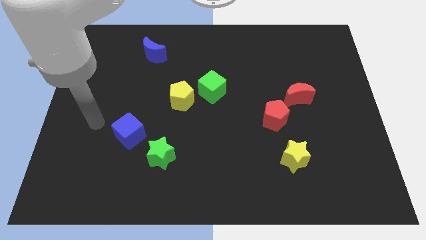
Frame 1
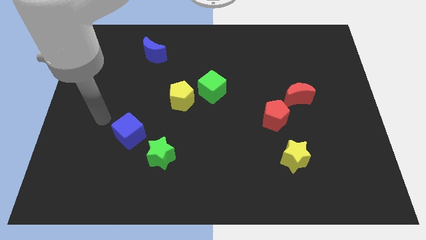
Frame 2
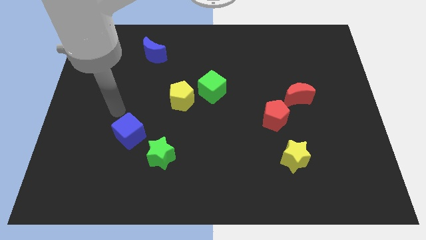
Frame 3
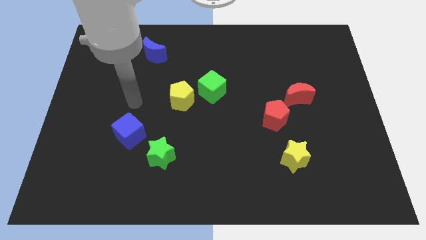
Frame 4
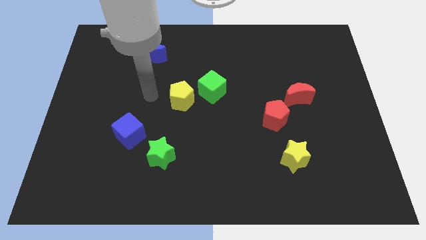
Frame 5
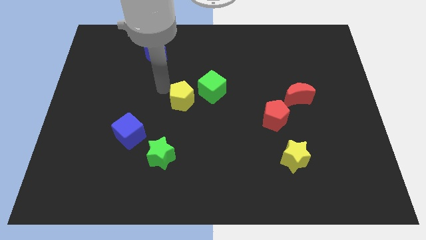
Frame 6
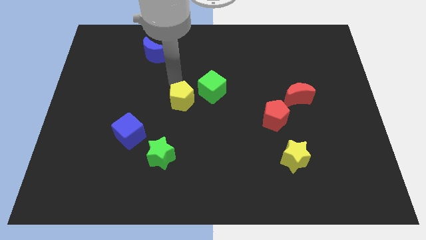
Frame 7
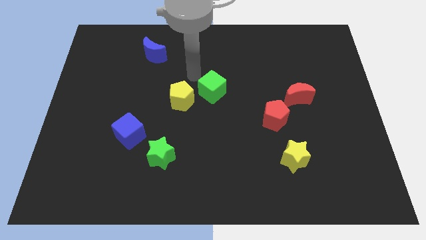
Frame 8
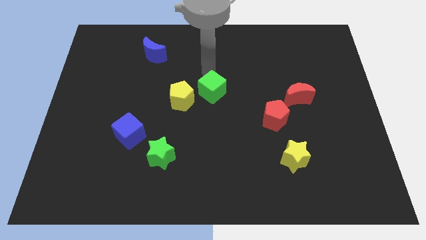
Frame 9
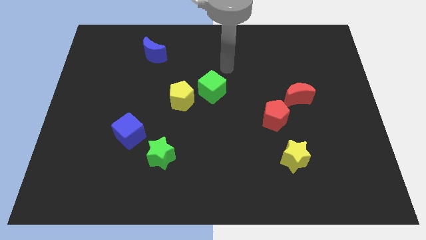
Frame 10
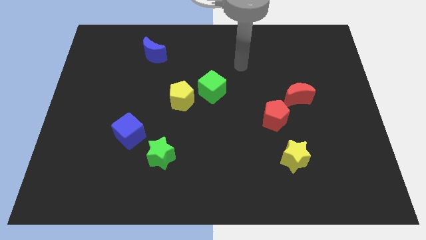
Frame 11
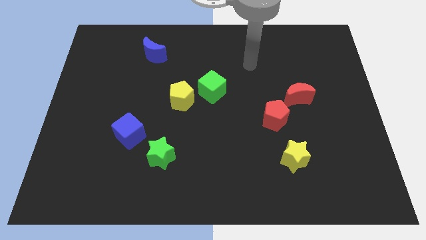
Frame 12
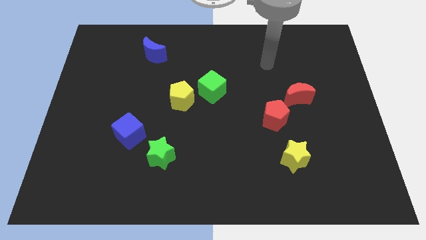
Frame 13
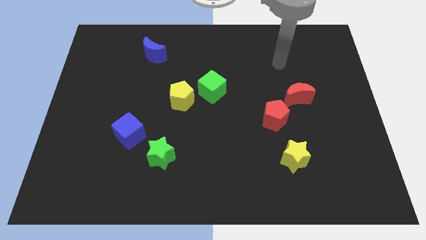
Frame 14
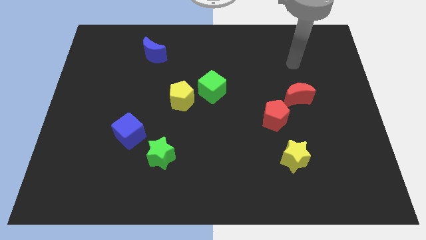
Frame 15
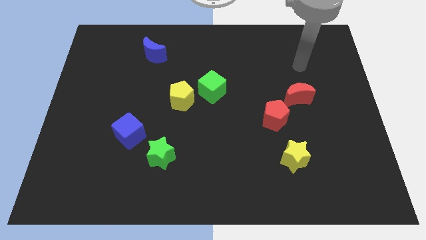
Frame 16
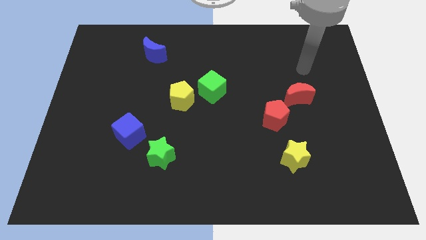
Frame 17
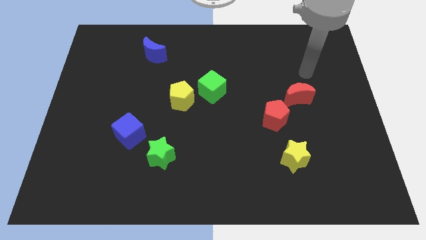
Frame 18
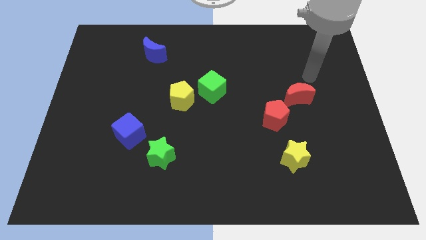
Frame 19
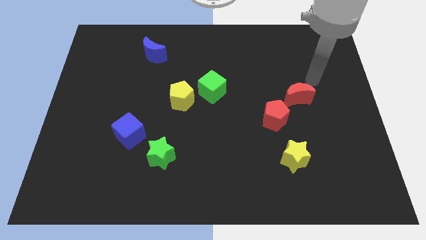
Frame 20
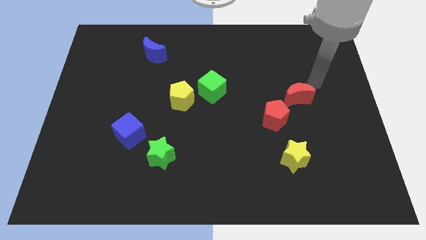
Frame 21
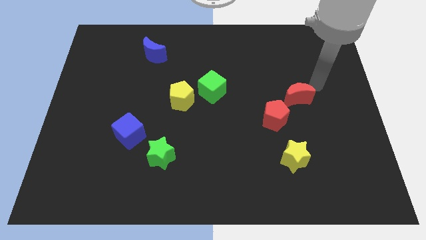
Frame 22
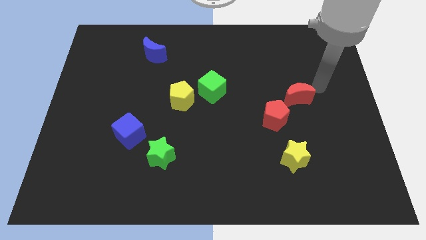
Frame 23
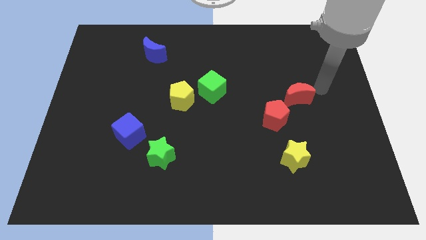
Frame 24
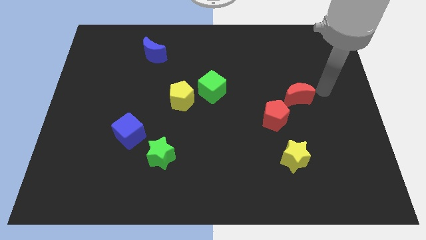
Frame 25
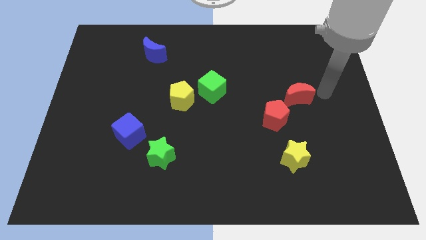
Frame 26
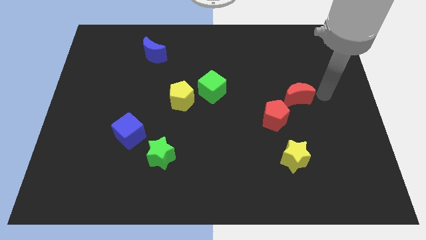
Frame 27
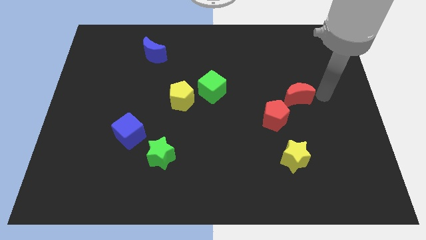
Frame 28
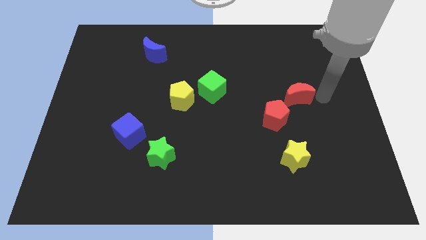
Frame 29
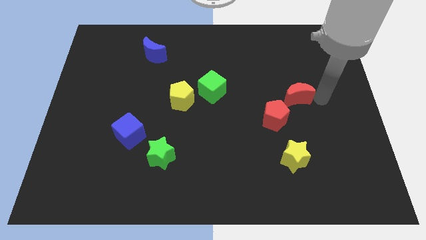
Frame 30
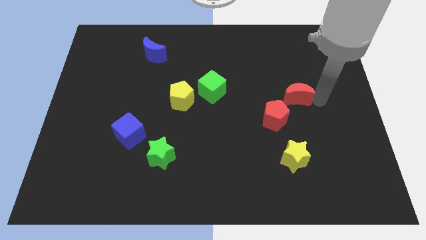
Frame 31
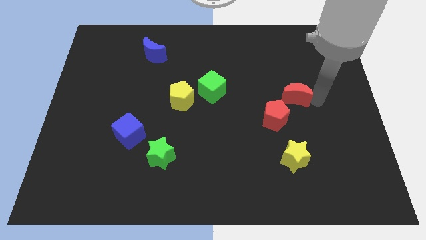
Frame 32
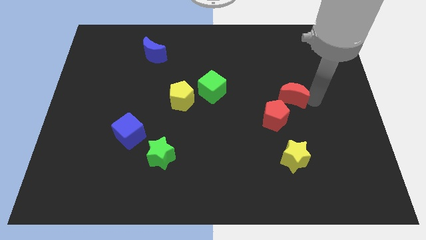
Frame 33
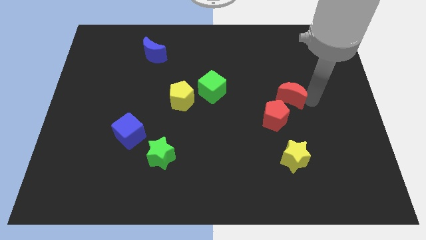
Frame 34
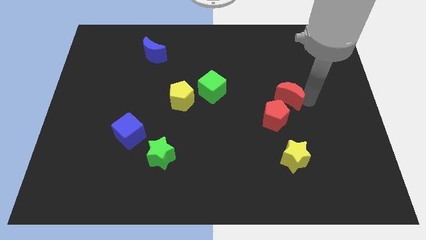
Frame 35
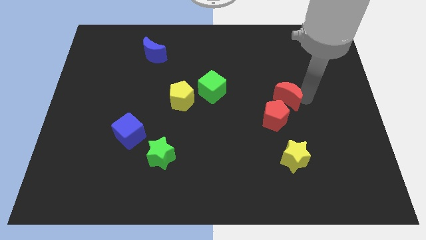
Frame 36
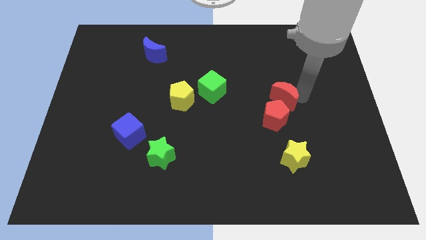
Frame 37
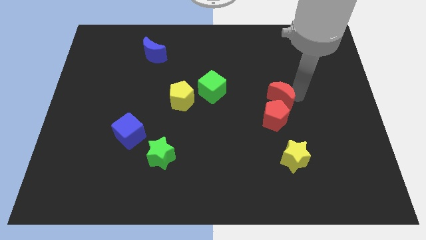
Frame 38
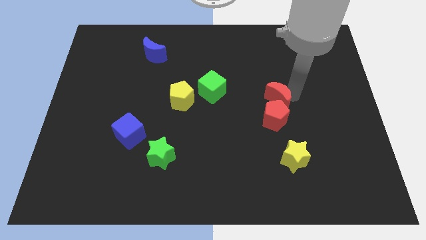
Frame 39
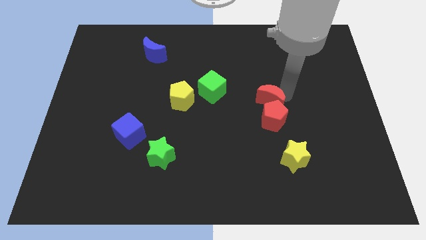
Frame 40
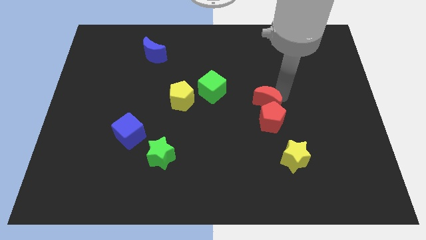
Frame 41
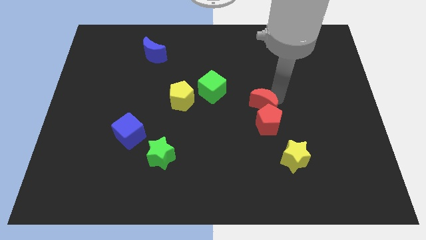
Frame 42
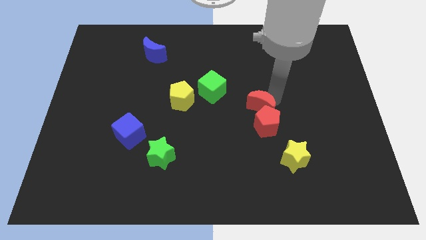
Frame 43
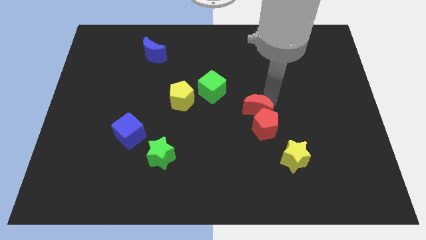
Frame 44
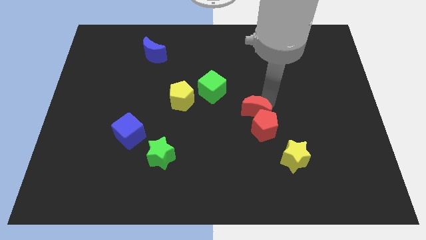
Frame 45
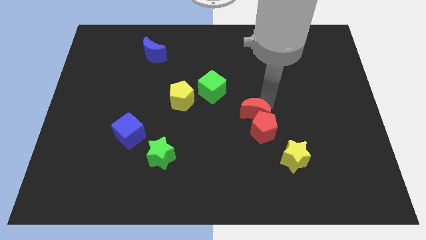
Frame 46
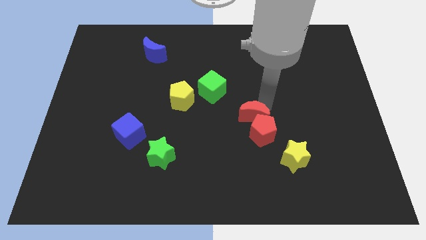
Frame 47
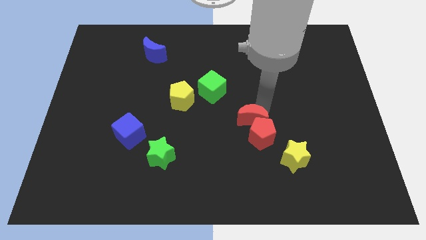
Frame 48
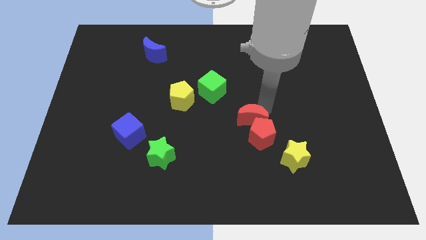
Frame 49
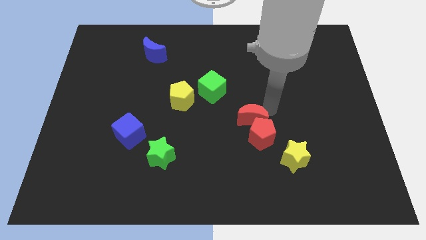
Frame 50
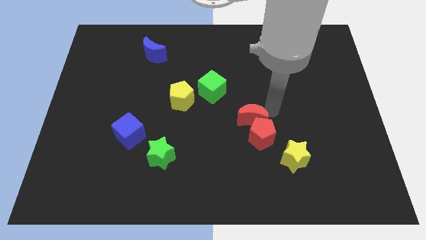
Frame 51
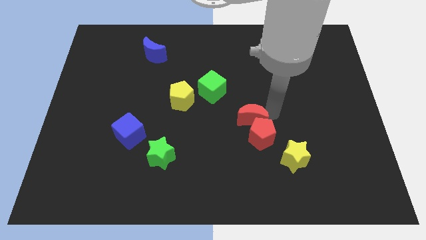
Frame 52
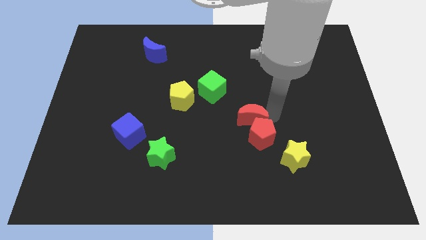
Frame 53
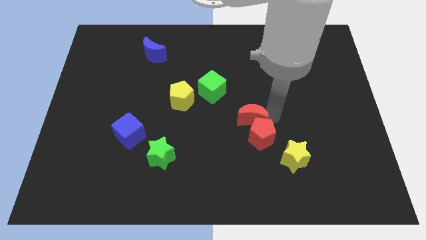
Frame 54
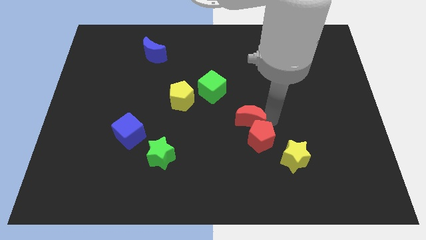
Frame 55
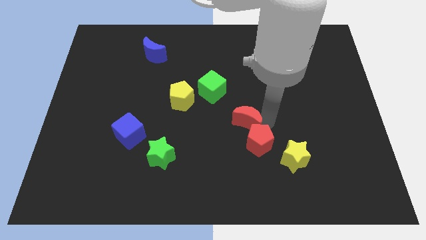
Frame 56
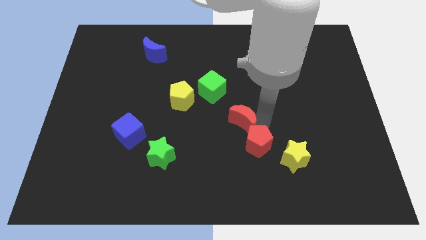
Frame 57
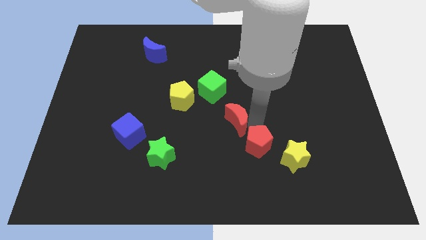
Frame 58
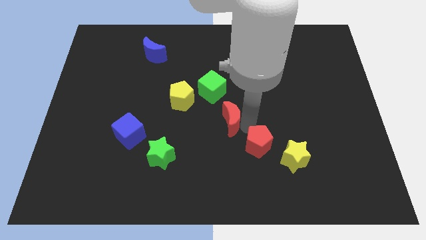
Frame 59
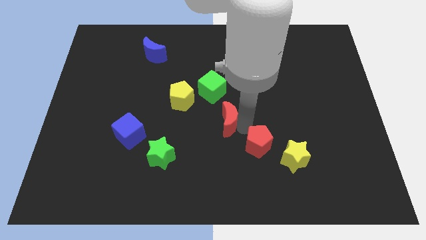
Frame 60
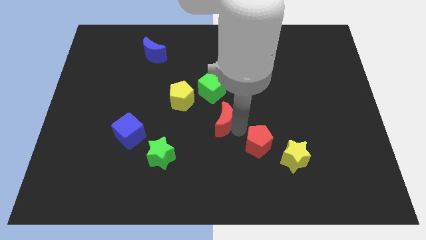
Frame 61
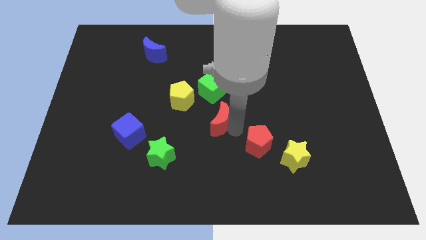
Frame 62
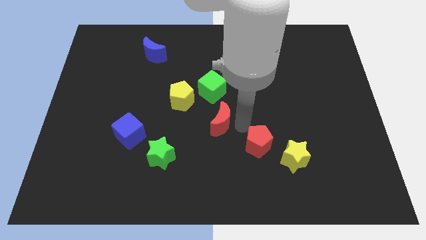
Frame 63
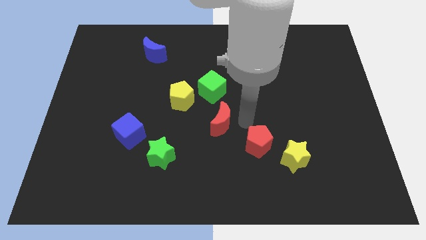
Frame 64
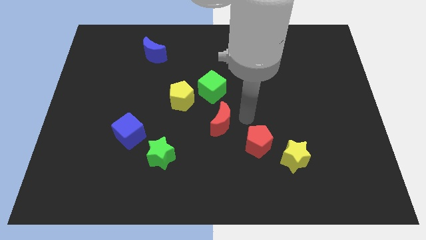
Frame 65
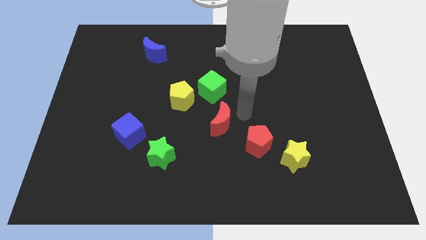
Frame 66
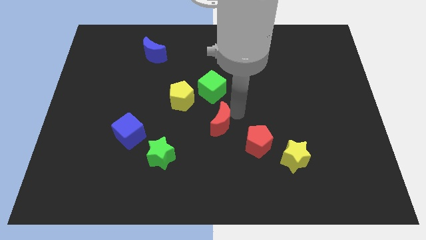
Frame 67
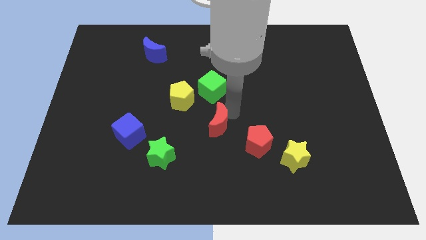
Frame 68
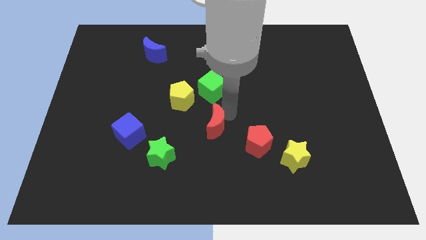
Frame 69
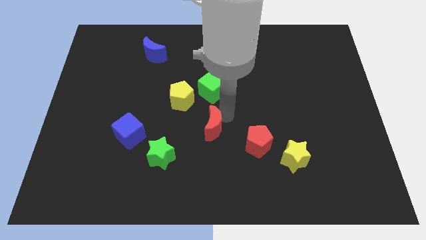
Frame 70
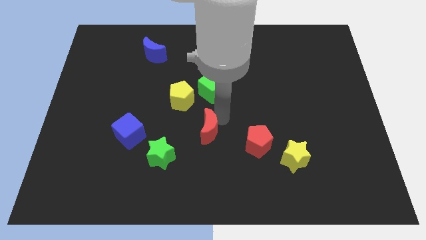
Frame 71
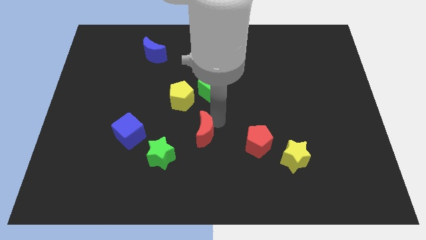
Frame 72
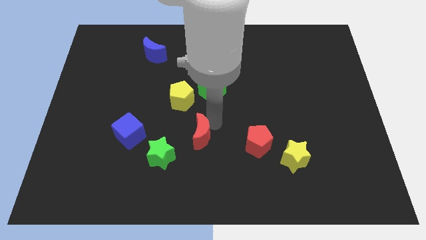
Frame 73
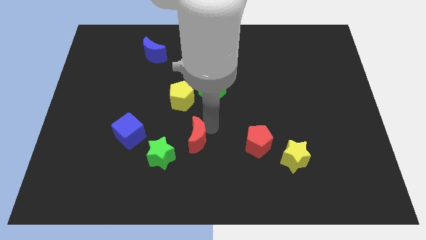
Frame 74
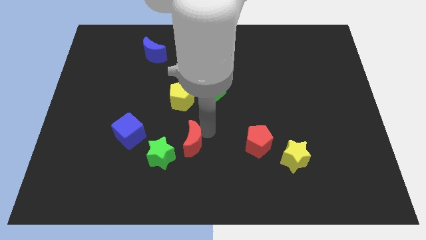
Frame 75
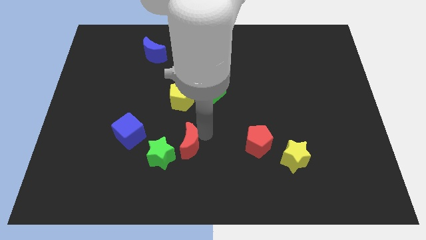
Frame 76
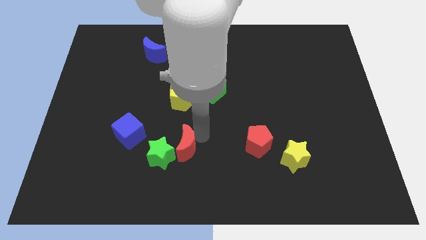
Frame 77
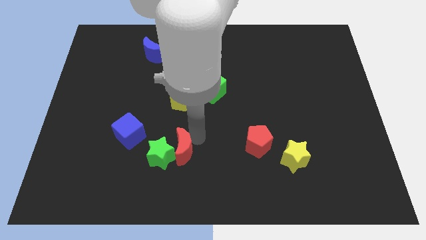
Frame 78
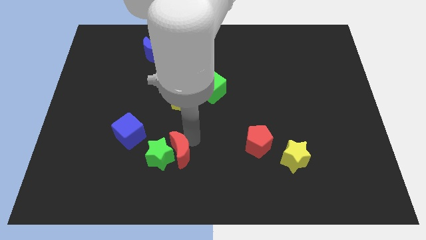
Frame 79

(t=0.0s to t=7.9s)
put the red moon to the green star

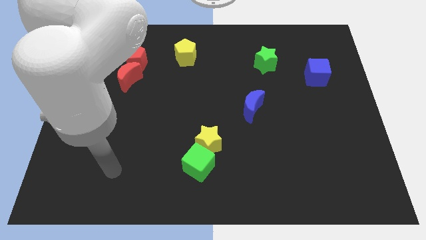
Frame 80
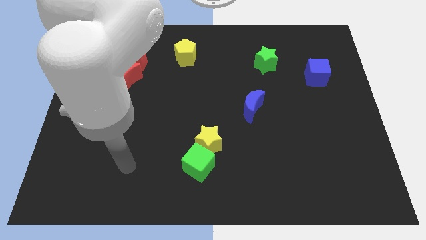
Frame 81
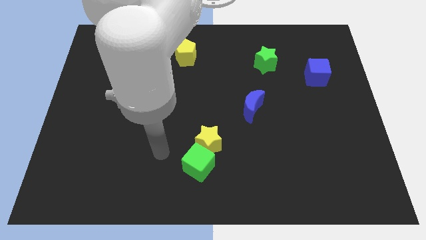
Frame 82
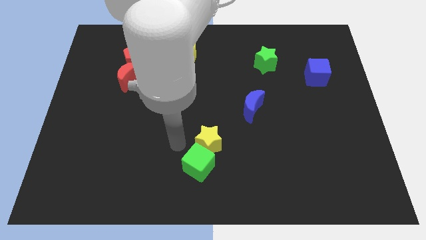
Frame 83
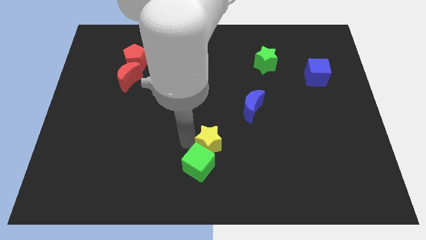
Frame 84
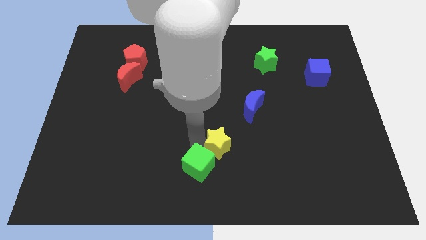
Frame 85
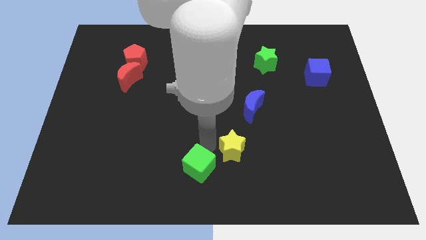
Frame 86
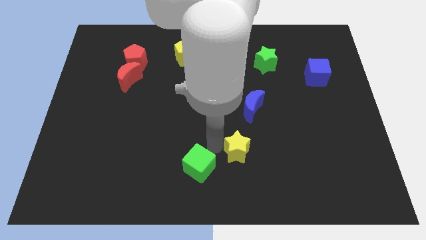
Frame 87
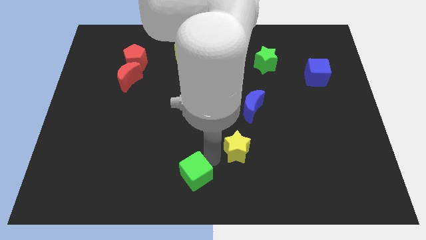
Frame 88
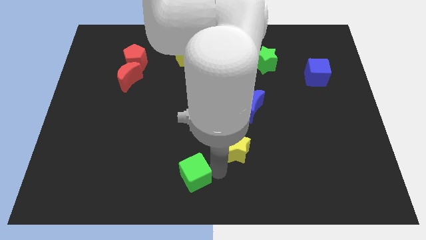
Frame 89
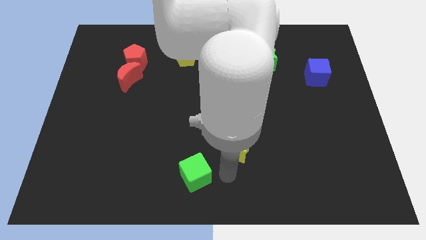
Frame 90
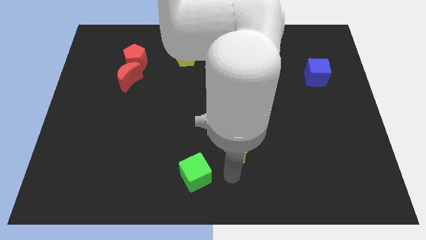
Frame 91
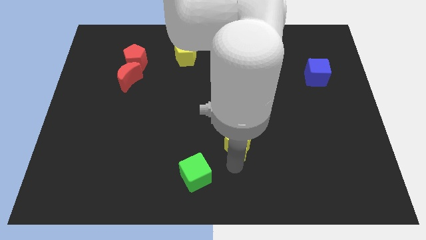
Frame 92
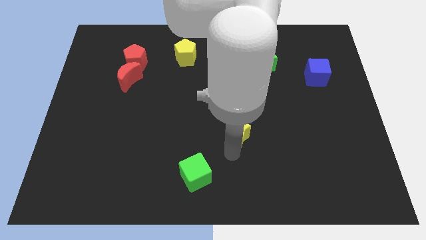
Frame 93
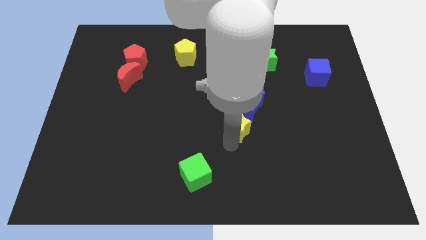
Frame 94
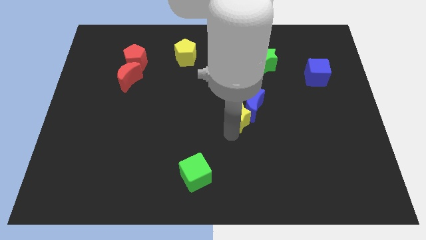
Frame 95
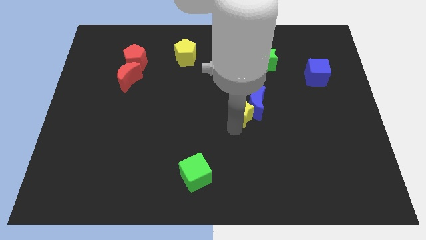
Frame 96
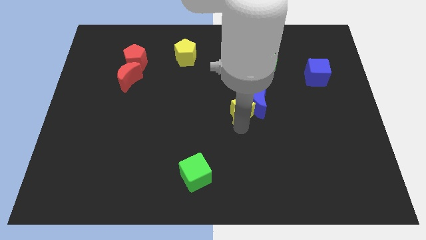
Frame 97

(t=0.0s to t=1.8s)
move the yellow star close to the blue moon
